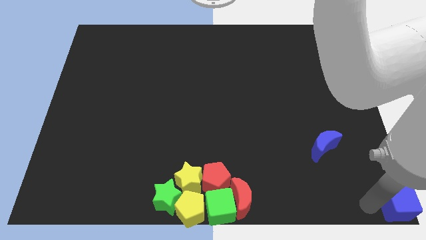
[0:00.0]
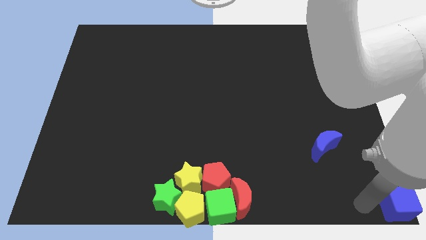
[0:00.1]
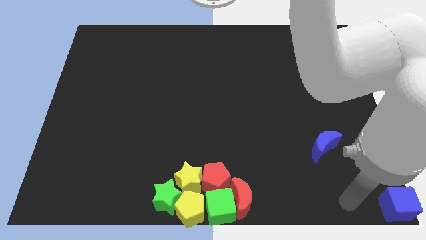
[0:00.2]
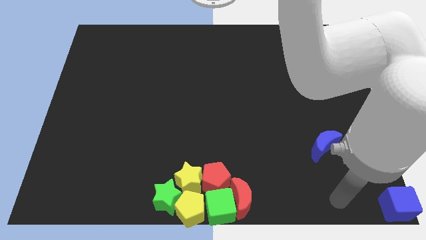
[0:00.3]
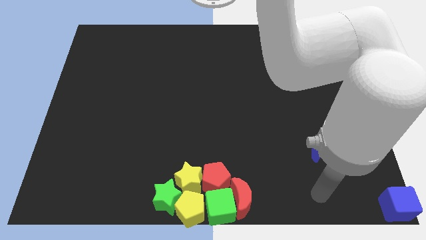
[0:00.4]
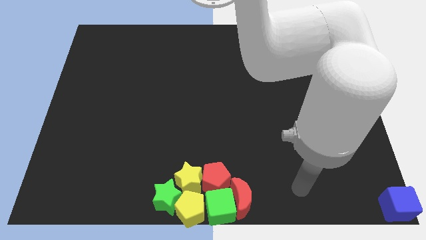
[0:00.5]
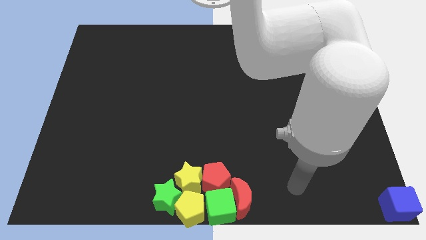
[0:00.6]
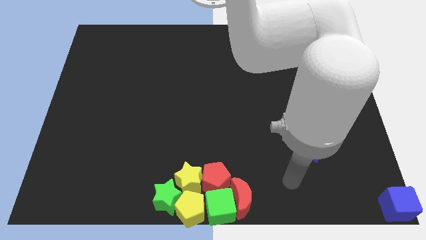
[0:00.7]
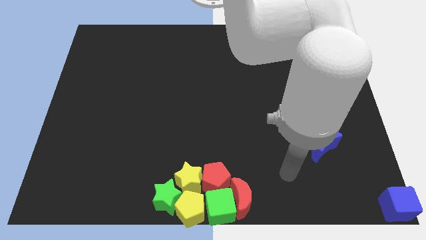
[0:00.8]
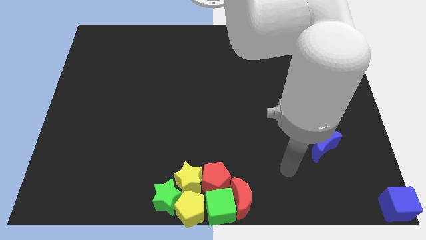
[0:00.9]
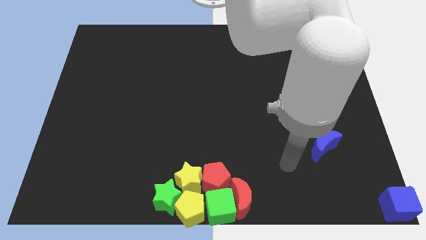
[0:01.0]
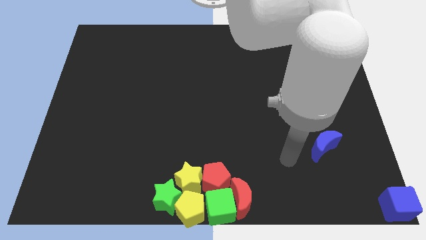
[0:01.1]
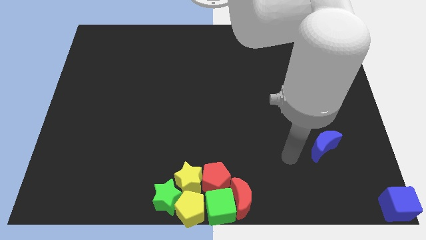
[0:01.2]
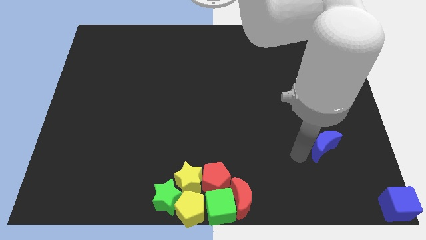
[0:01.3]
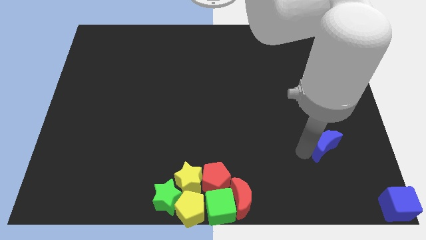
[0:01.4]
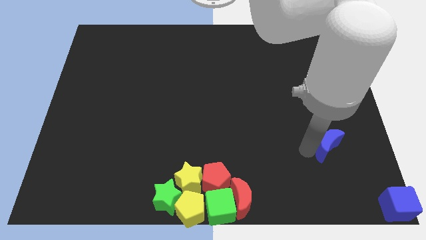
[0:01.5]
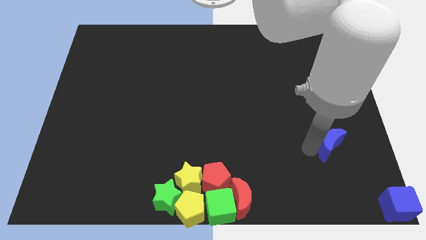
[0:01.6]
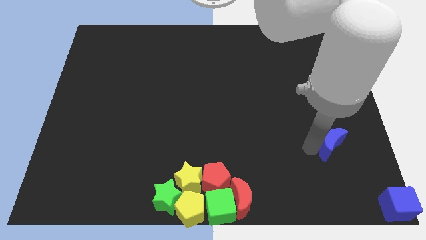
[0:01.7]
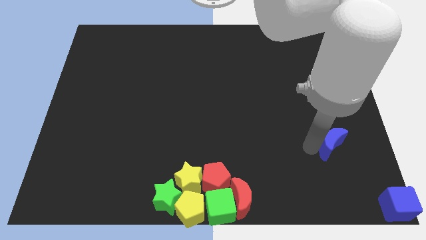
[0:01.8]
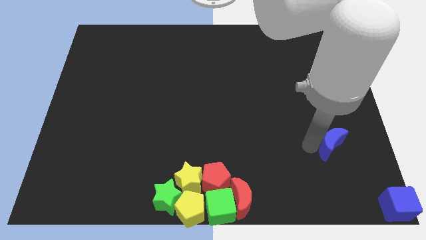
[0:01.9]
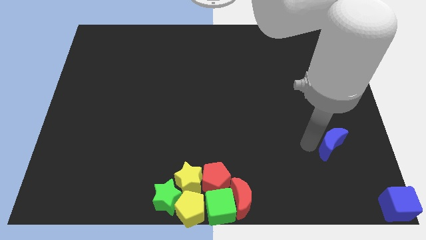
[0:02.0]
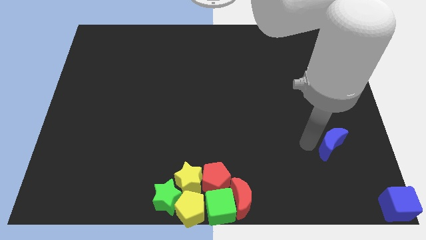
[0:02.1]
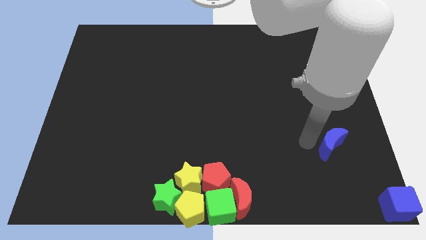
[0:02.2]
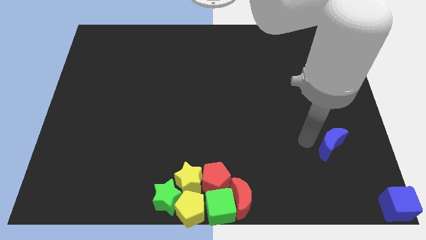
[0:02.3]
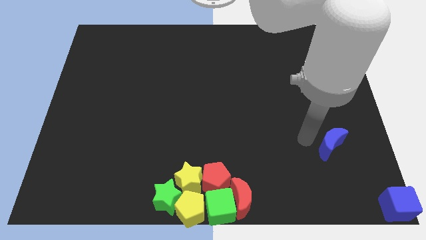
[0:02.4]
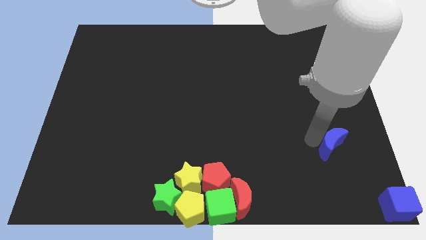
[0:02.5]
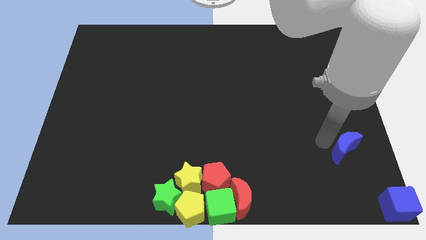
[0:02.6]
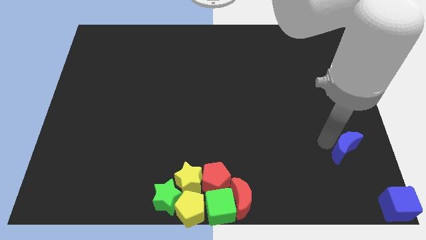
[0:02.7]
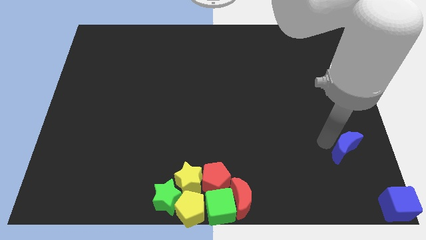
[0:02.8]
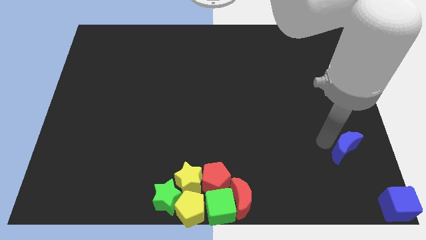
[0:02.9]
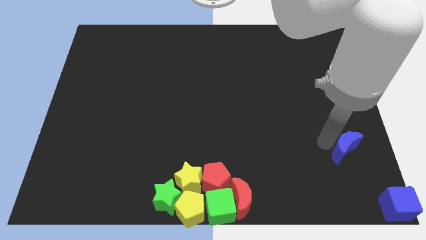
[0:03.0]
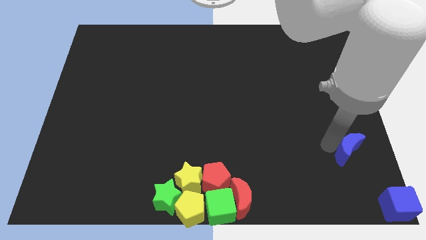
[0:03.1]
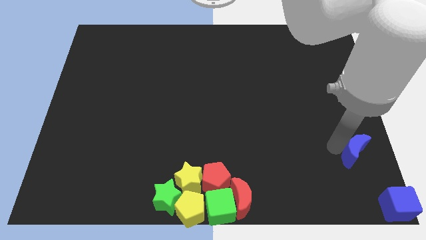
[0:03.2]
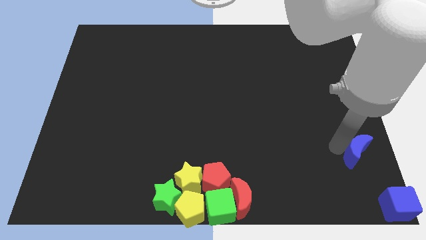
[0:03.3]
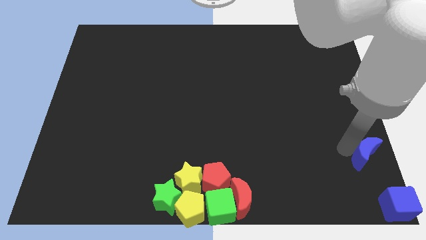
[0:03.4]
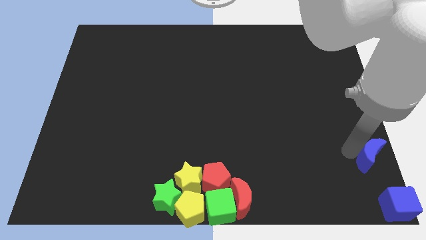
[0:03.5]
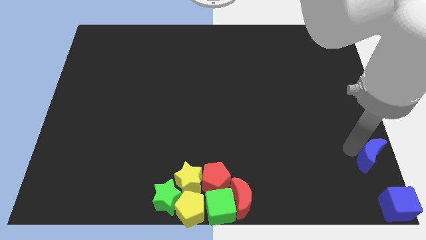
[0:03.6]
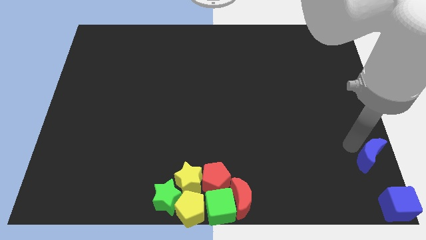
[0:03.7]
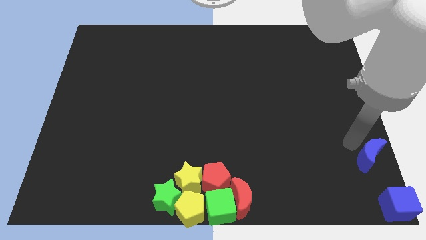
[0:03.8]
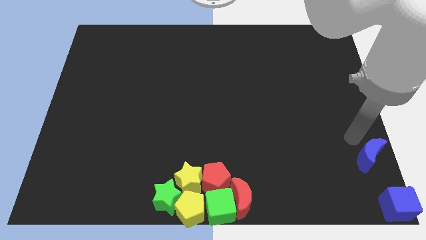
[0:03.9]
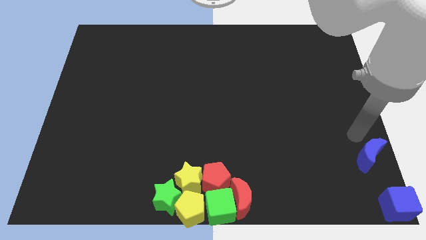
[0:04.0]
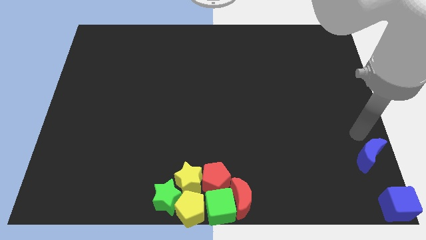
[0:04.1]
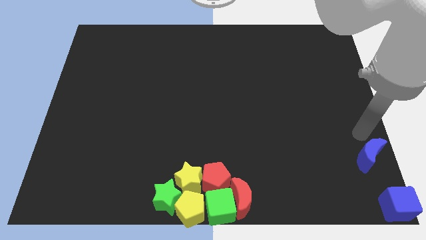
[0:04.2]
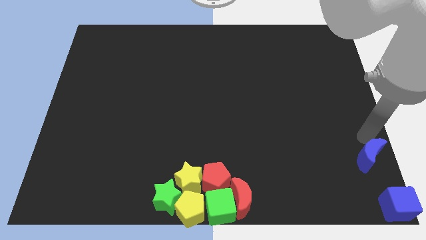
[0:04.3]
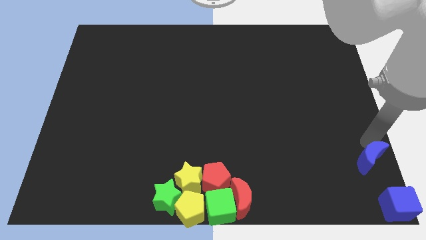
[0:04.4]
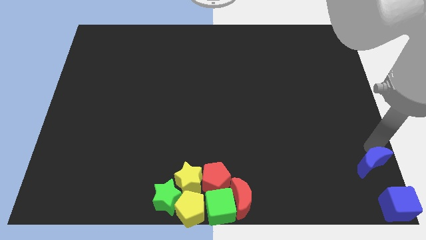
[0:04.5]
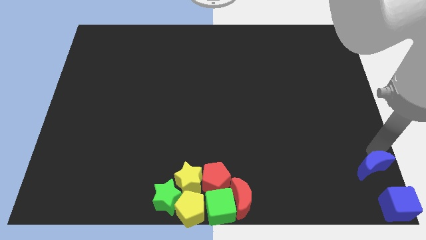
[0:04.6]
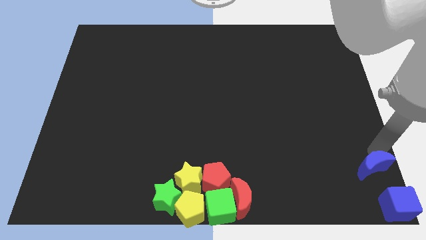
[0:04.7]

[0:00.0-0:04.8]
move the blue crescent to the top of the blue cube

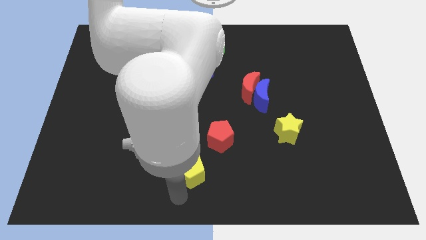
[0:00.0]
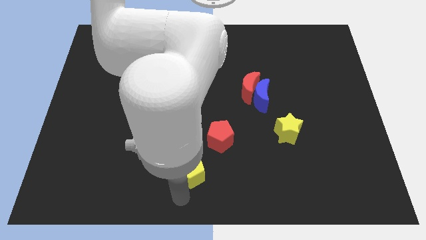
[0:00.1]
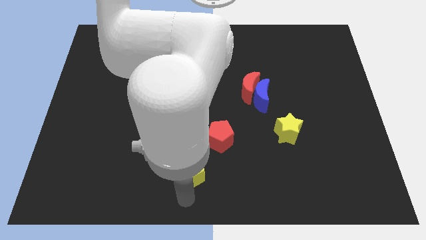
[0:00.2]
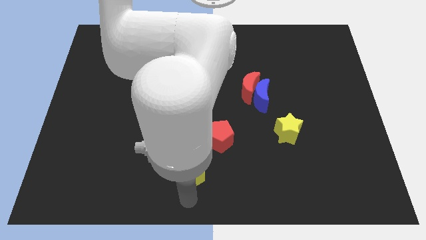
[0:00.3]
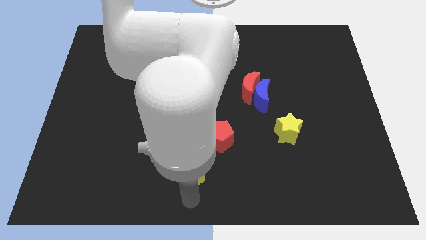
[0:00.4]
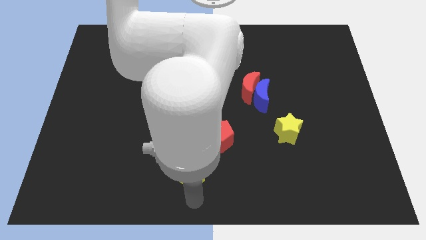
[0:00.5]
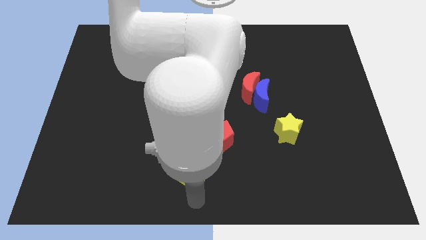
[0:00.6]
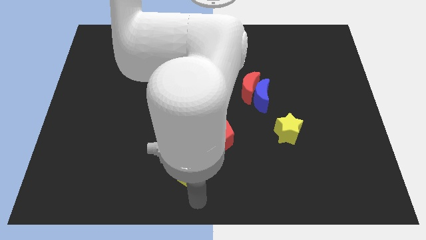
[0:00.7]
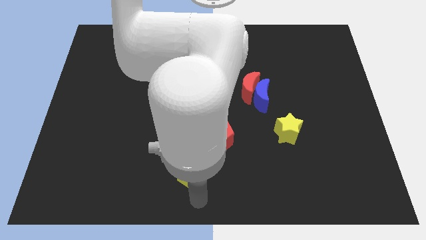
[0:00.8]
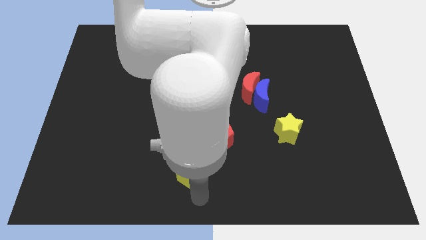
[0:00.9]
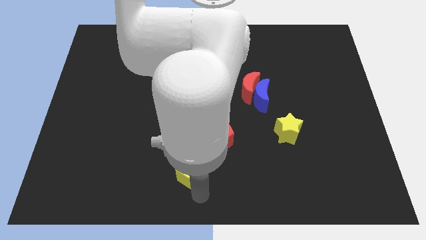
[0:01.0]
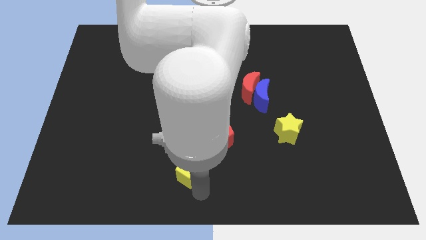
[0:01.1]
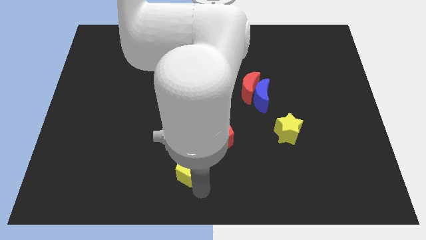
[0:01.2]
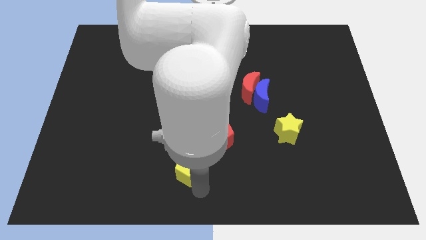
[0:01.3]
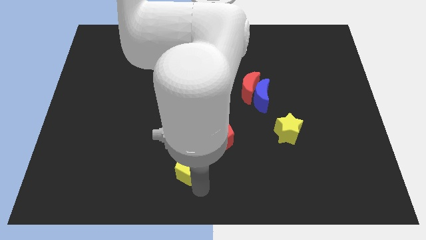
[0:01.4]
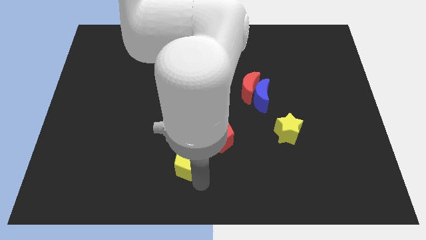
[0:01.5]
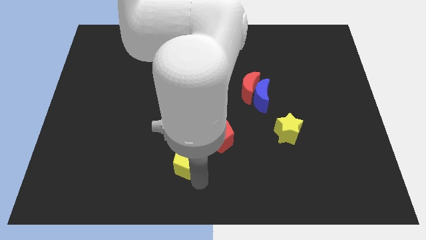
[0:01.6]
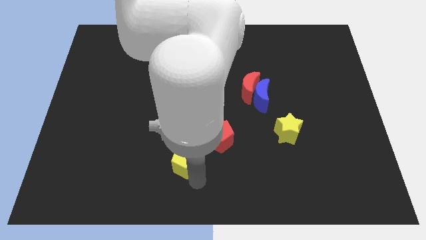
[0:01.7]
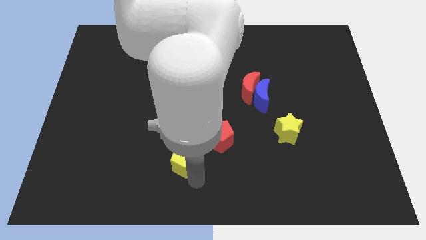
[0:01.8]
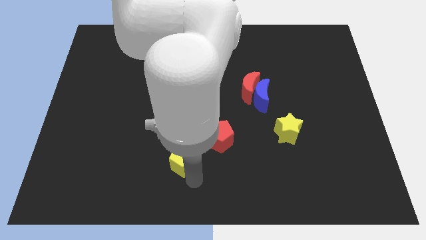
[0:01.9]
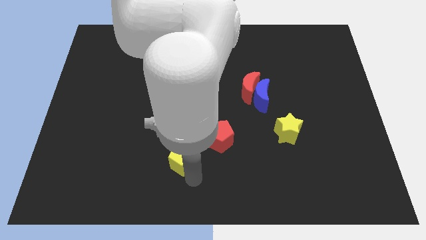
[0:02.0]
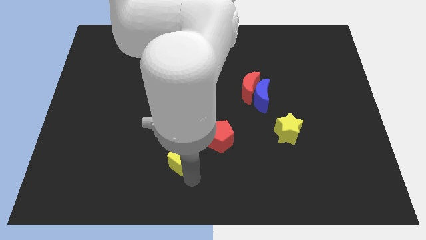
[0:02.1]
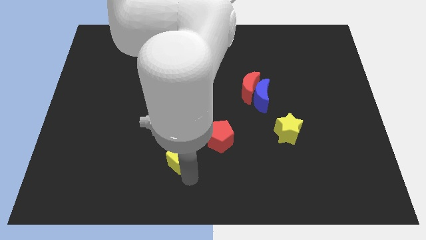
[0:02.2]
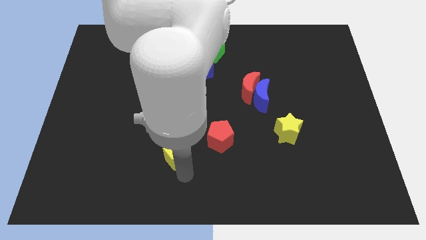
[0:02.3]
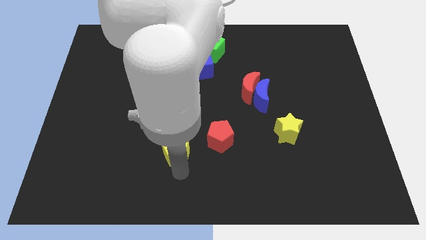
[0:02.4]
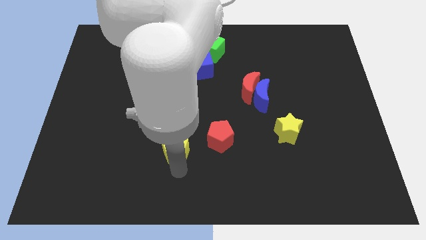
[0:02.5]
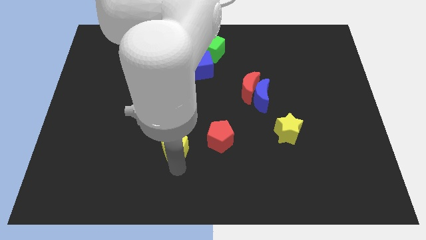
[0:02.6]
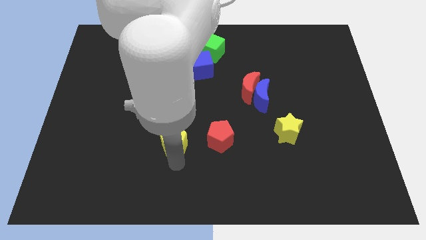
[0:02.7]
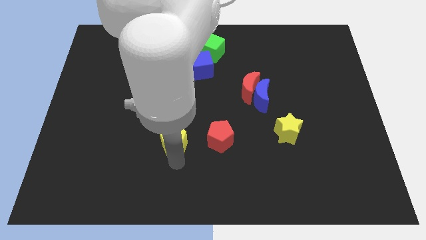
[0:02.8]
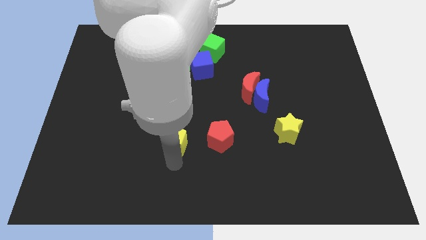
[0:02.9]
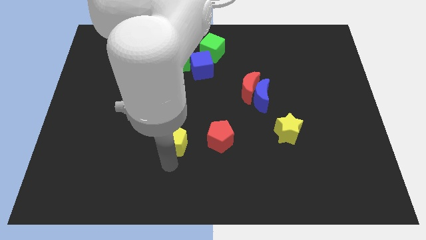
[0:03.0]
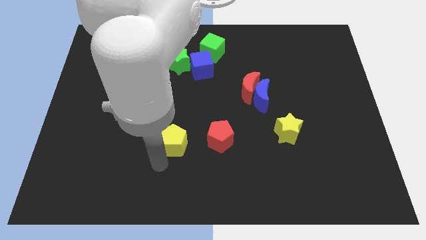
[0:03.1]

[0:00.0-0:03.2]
move the yellow pentagon to the left of the red pentagon

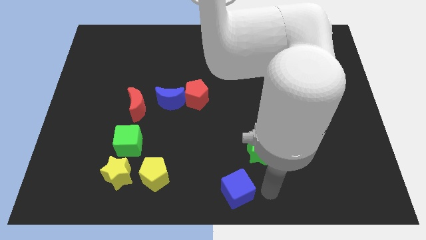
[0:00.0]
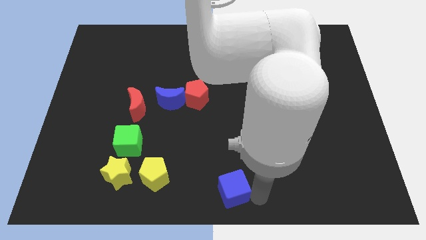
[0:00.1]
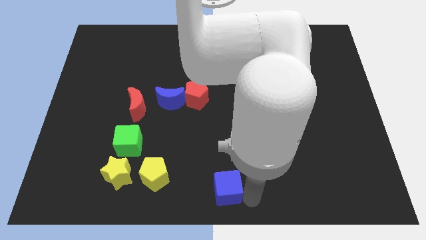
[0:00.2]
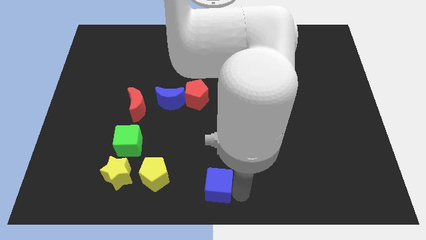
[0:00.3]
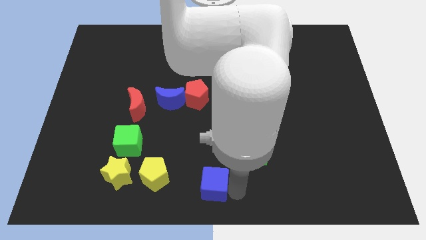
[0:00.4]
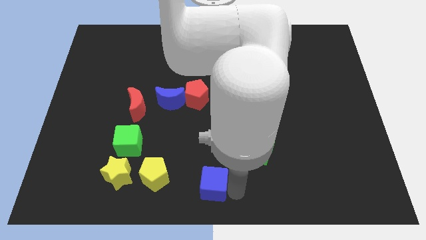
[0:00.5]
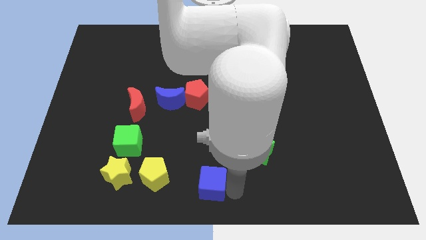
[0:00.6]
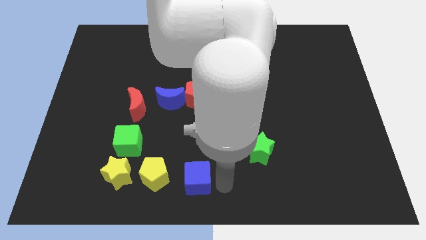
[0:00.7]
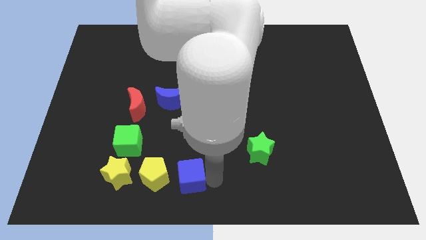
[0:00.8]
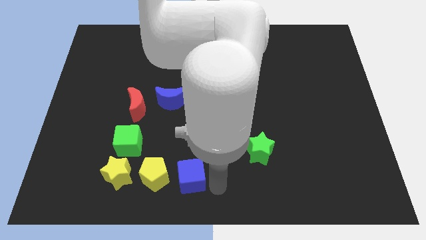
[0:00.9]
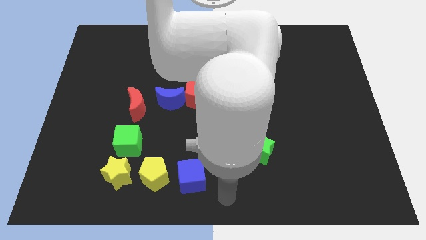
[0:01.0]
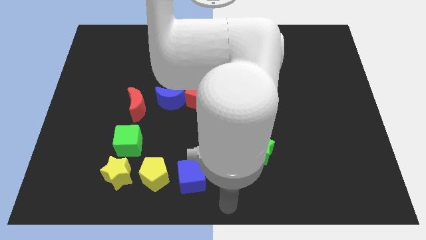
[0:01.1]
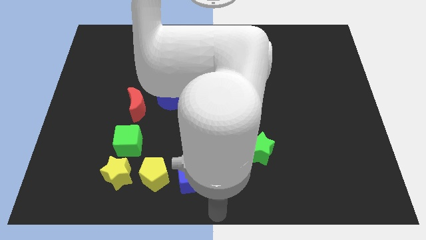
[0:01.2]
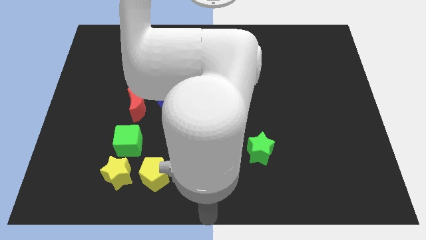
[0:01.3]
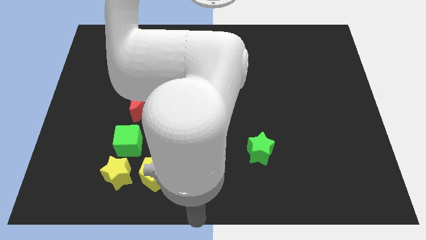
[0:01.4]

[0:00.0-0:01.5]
move the blue cube close to the yellow pentagon
